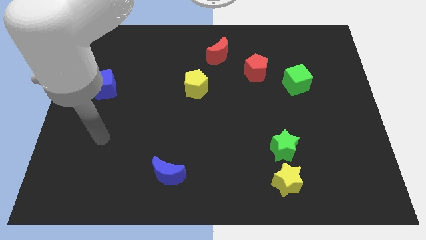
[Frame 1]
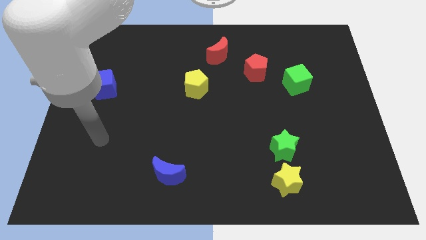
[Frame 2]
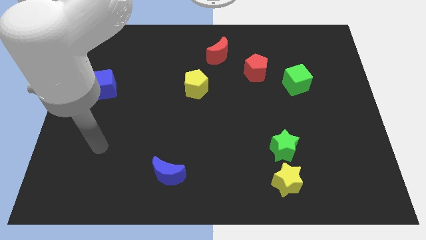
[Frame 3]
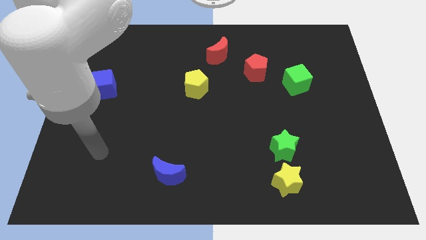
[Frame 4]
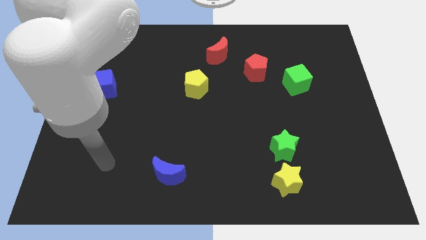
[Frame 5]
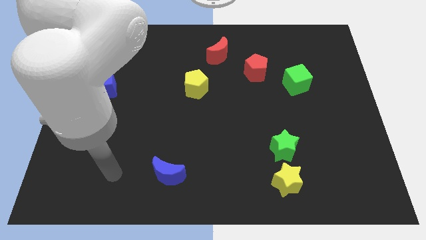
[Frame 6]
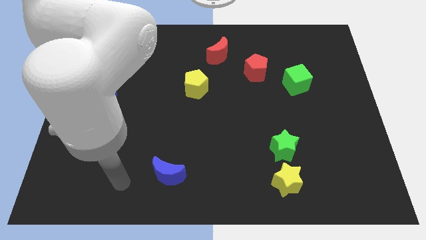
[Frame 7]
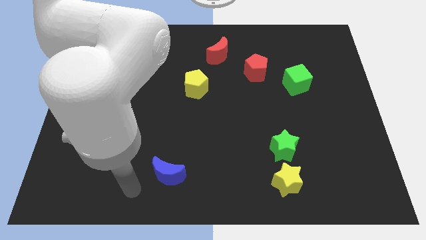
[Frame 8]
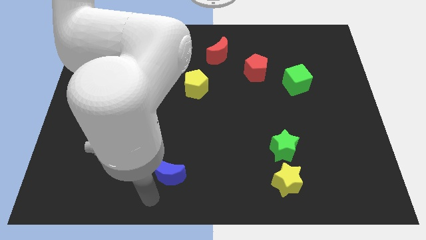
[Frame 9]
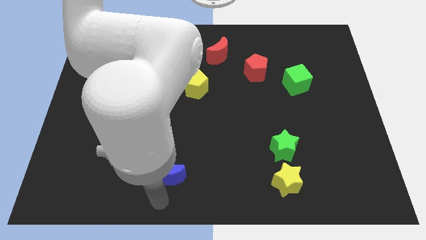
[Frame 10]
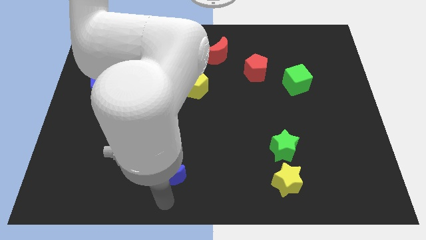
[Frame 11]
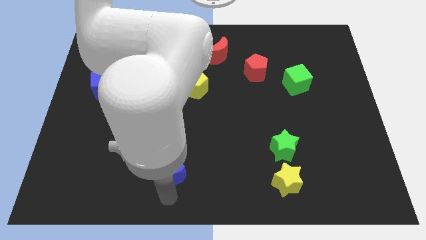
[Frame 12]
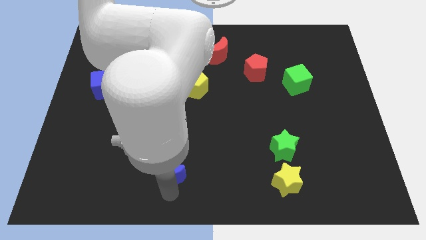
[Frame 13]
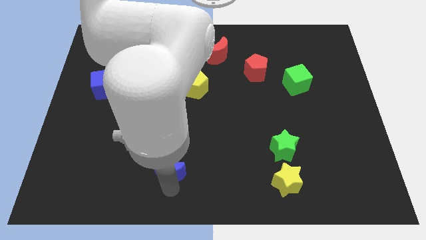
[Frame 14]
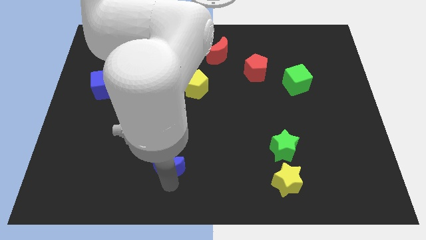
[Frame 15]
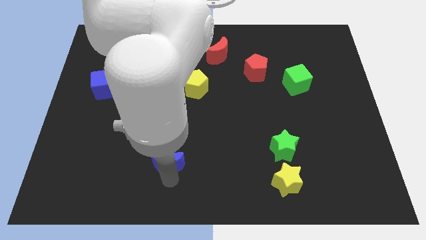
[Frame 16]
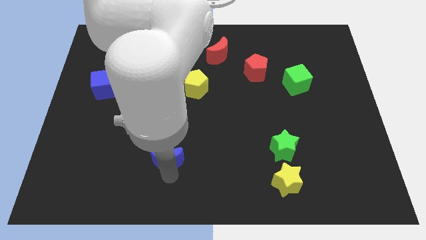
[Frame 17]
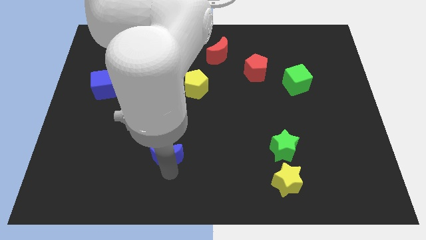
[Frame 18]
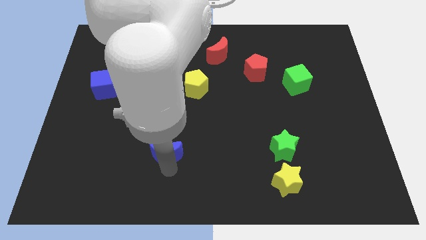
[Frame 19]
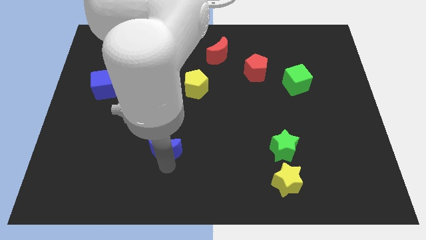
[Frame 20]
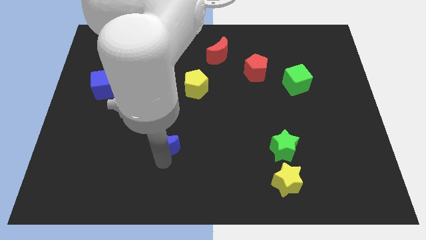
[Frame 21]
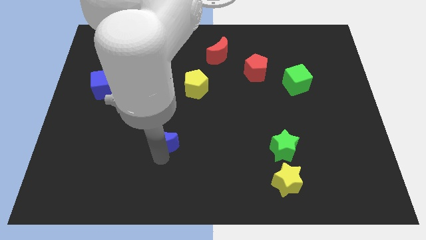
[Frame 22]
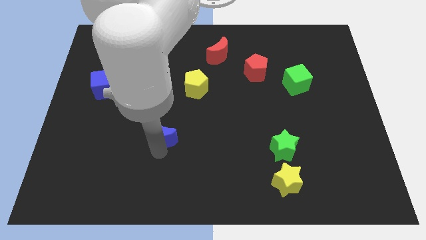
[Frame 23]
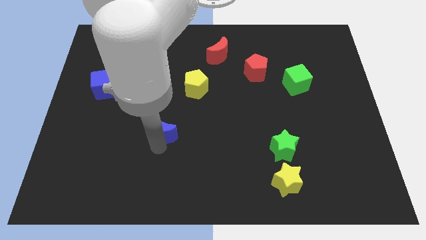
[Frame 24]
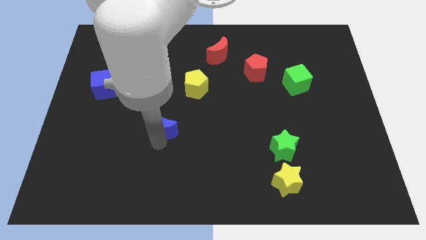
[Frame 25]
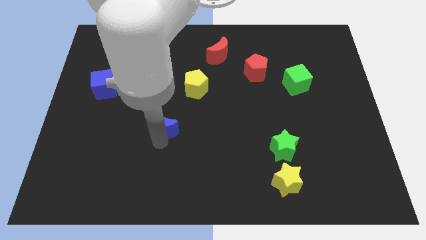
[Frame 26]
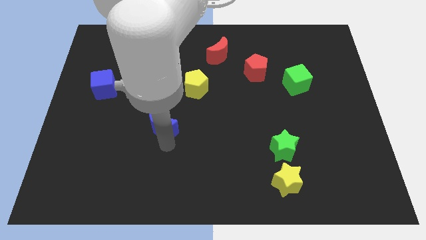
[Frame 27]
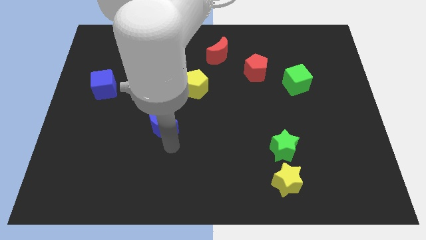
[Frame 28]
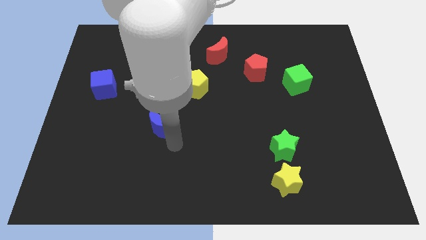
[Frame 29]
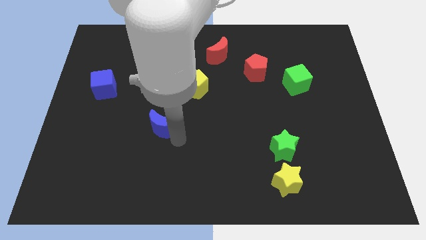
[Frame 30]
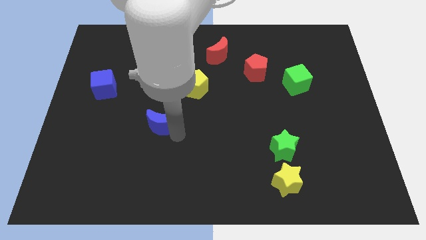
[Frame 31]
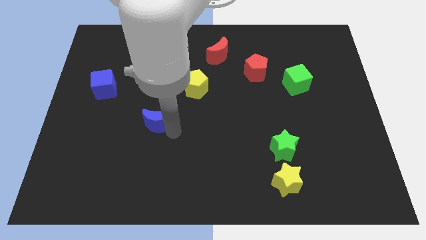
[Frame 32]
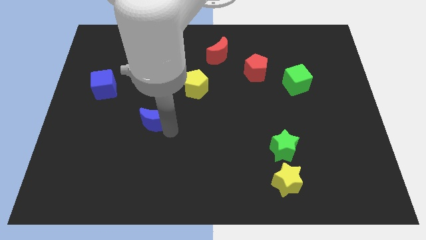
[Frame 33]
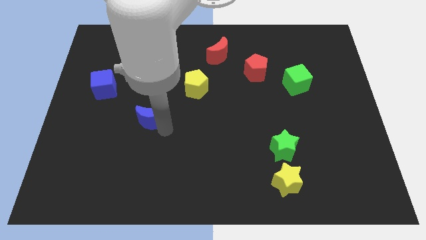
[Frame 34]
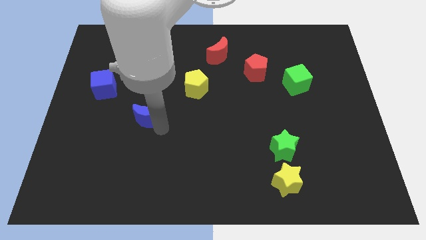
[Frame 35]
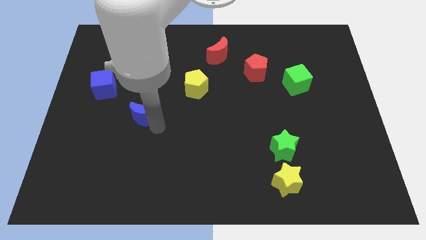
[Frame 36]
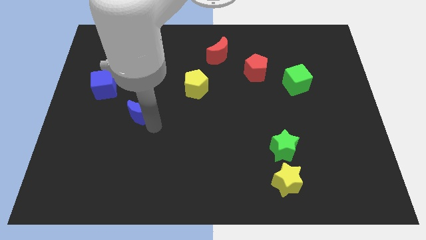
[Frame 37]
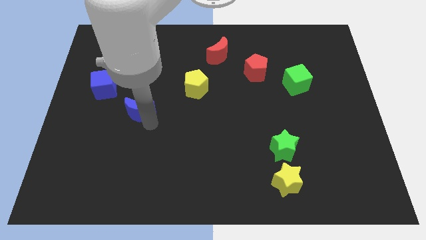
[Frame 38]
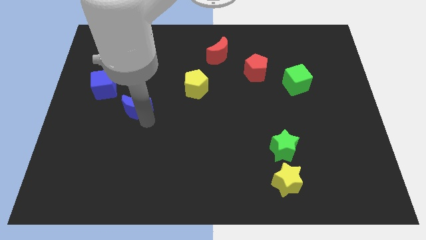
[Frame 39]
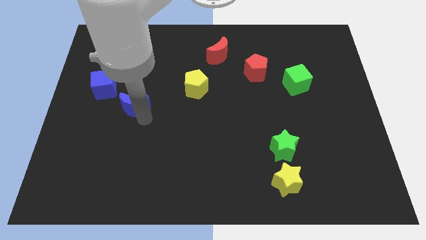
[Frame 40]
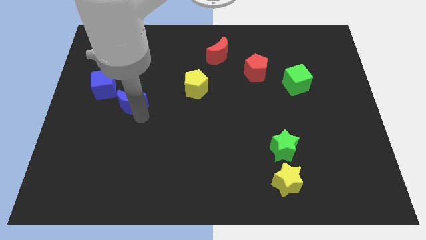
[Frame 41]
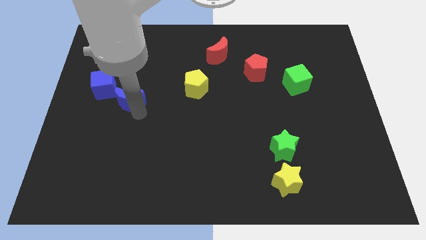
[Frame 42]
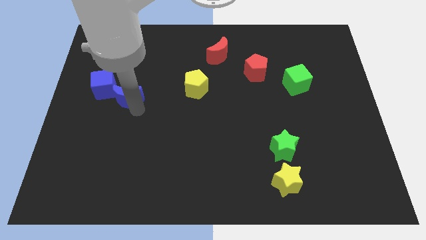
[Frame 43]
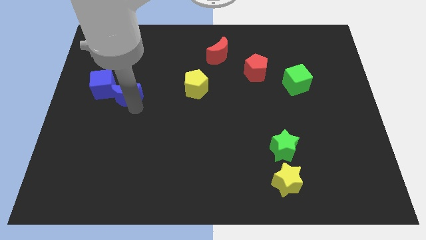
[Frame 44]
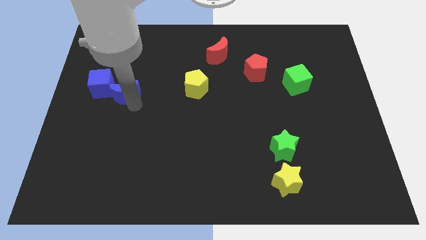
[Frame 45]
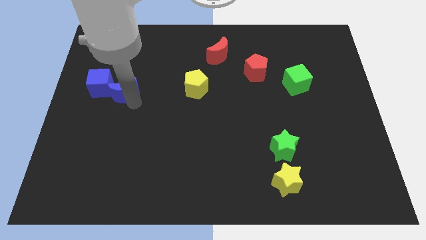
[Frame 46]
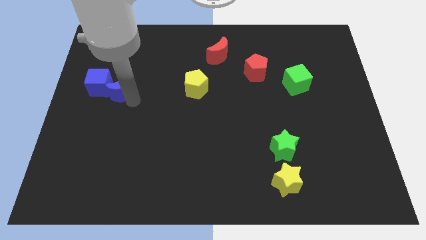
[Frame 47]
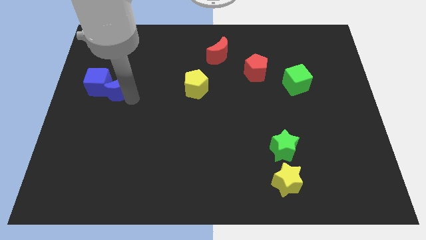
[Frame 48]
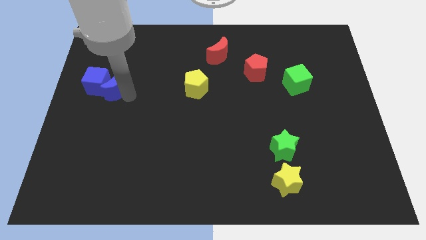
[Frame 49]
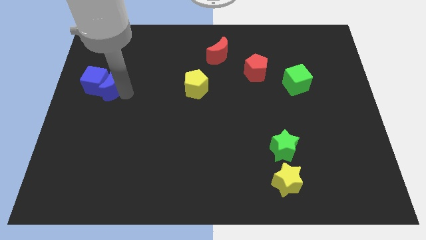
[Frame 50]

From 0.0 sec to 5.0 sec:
put the blue moon to the blue cube

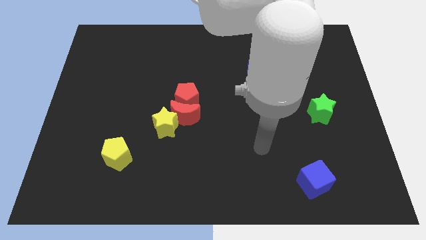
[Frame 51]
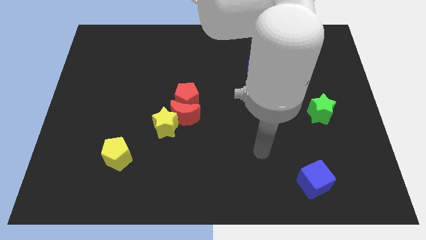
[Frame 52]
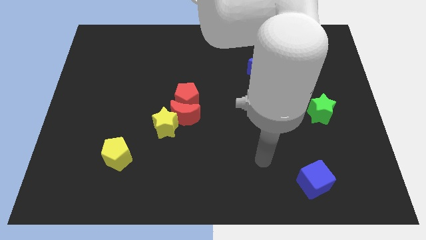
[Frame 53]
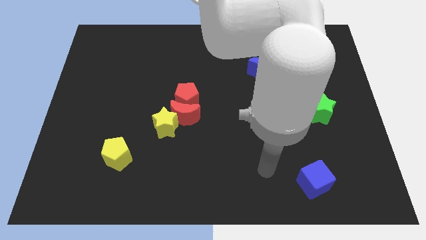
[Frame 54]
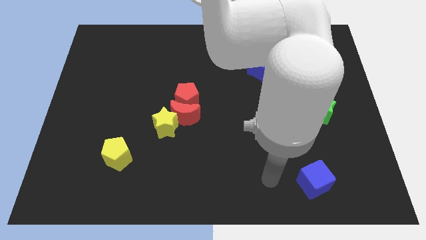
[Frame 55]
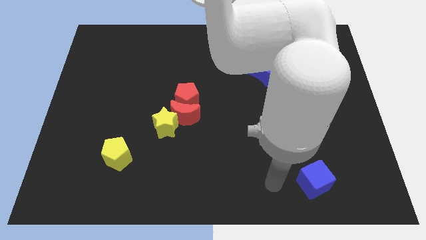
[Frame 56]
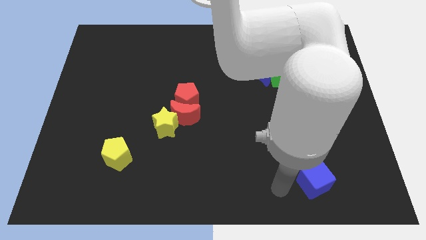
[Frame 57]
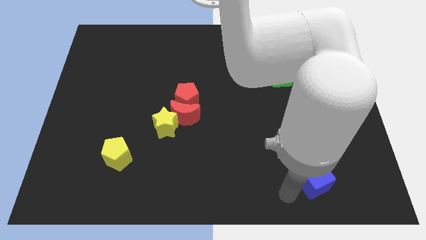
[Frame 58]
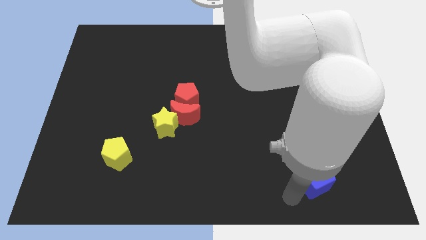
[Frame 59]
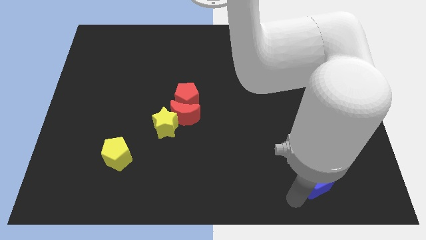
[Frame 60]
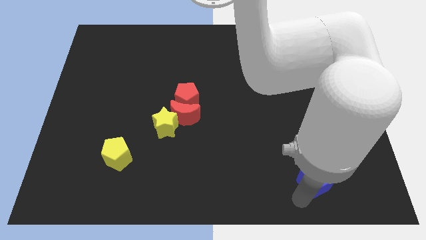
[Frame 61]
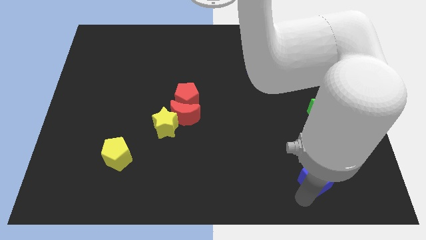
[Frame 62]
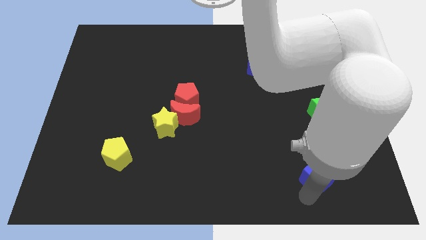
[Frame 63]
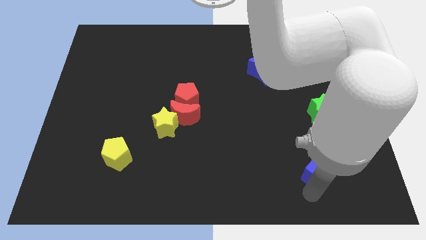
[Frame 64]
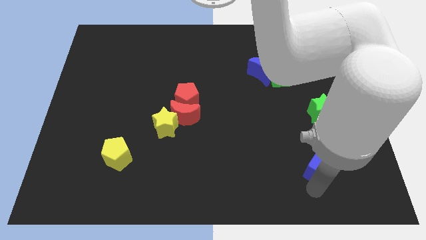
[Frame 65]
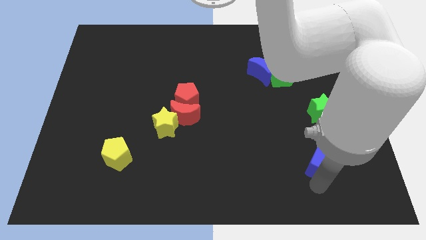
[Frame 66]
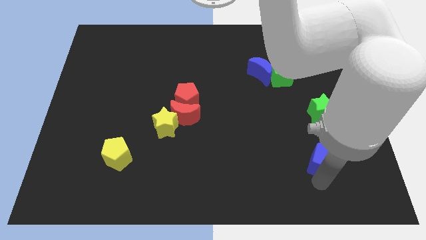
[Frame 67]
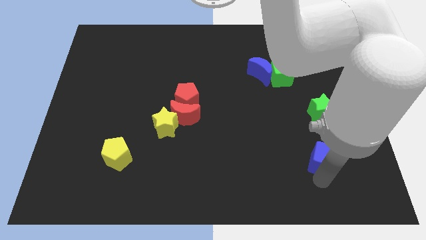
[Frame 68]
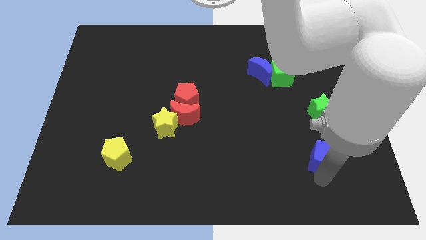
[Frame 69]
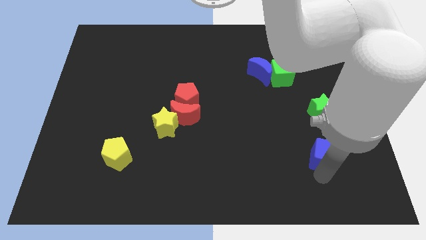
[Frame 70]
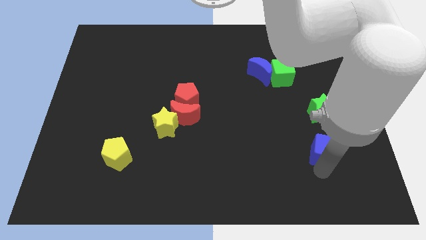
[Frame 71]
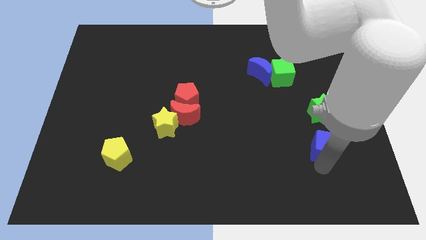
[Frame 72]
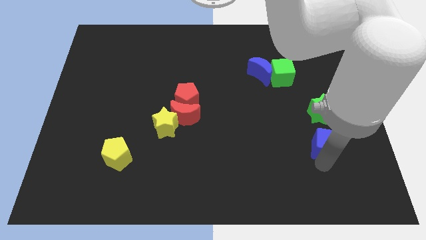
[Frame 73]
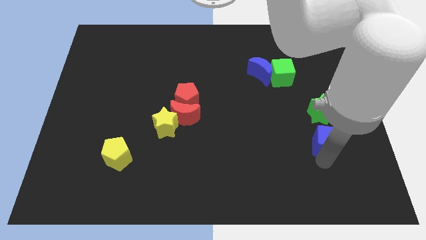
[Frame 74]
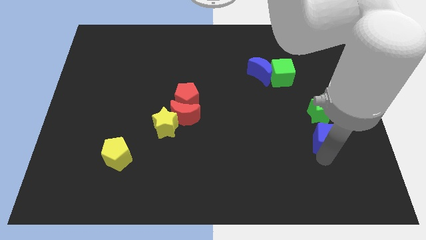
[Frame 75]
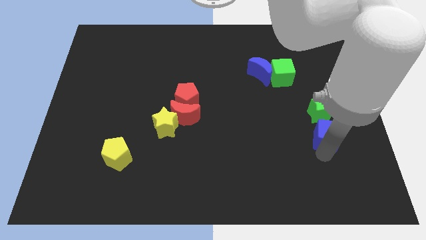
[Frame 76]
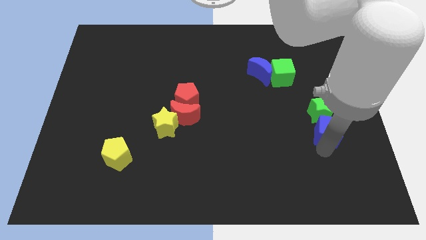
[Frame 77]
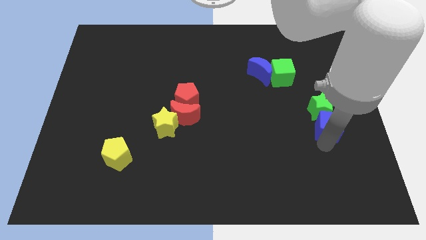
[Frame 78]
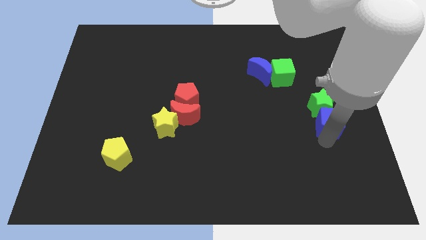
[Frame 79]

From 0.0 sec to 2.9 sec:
slide the blue cube next to the green star

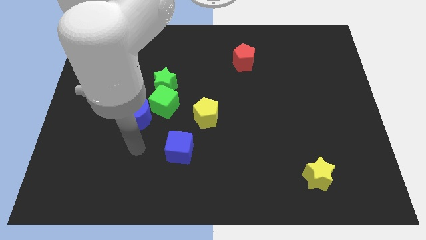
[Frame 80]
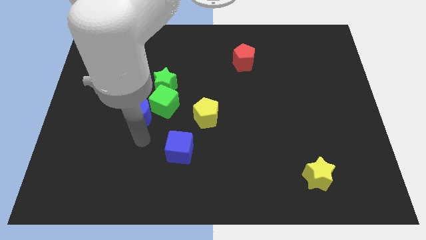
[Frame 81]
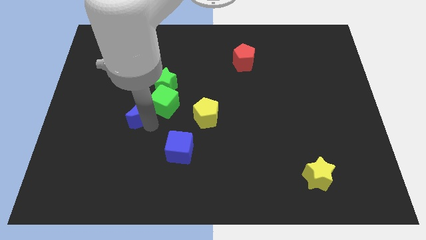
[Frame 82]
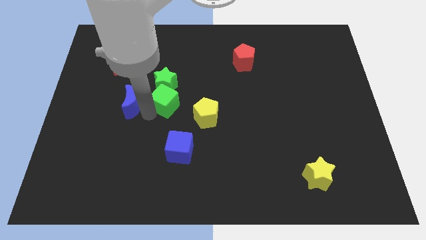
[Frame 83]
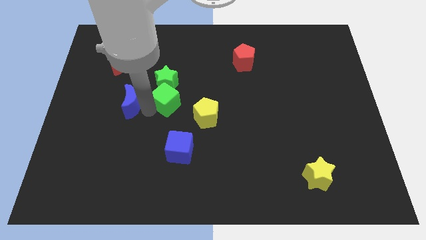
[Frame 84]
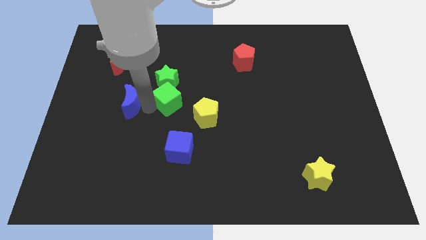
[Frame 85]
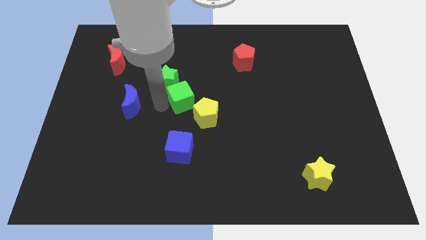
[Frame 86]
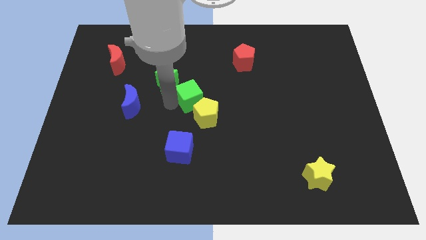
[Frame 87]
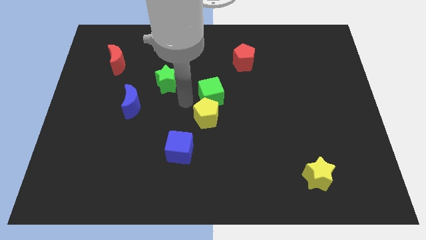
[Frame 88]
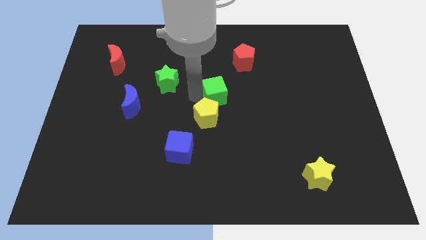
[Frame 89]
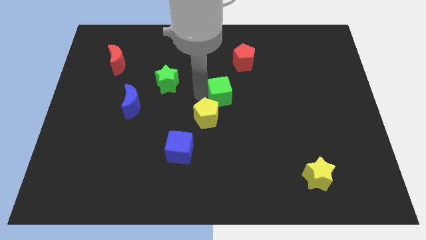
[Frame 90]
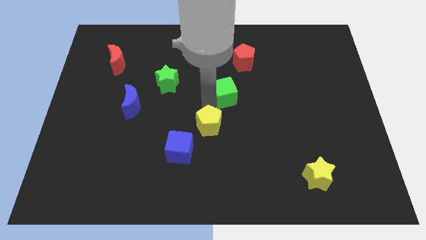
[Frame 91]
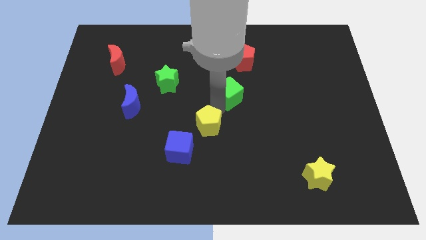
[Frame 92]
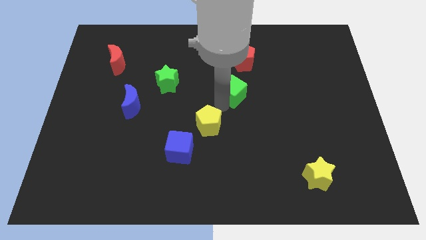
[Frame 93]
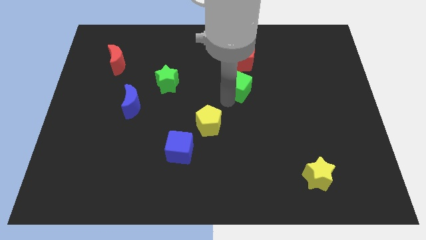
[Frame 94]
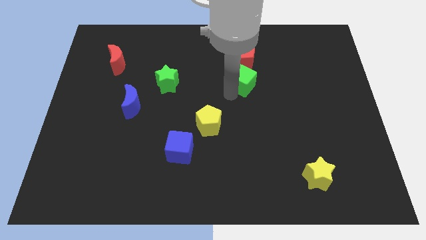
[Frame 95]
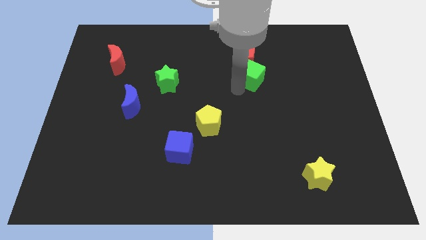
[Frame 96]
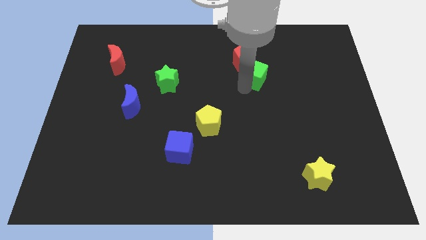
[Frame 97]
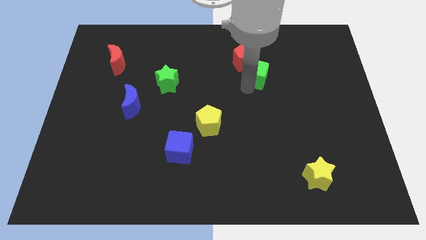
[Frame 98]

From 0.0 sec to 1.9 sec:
put the green cube towards the red pentagon
